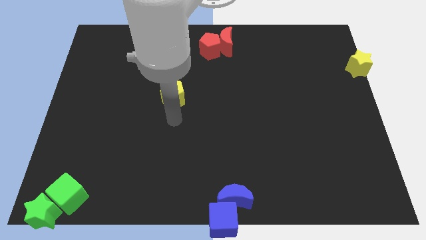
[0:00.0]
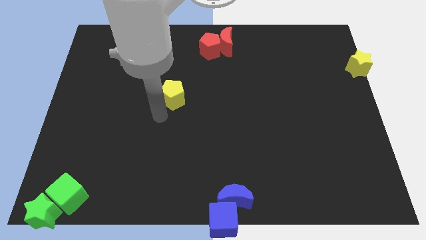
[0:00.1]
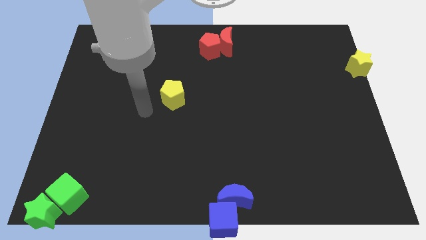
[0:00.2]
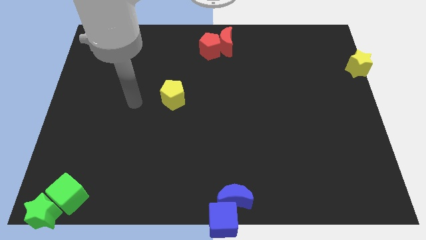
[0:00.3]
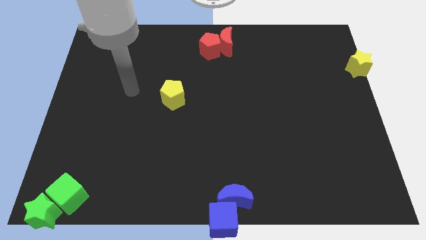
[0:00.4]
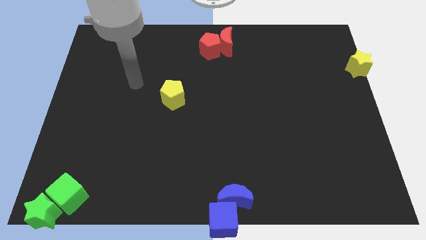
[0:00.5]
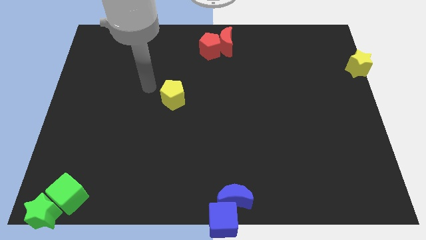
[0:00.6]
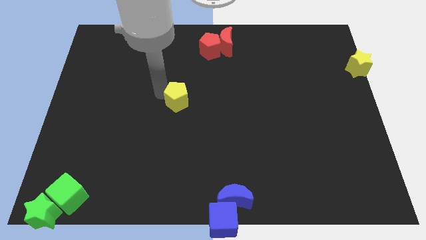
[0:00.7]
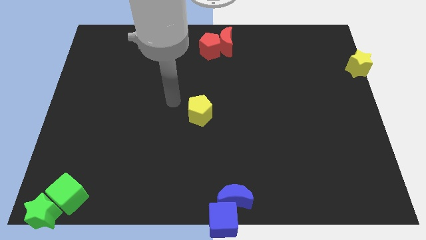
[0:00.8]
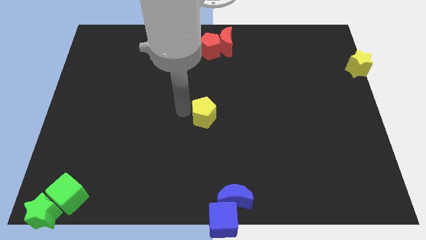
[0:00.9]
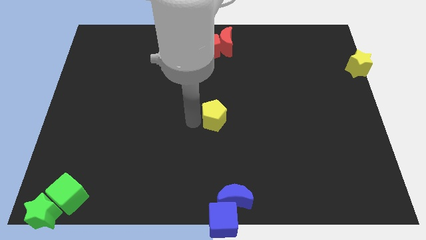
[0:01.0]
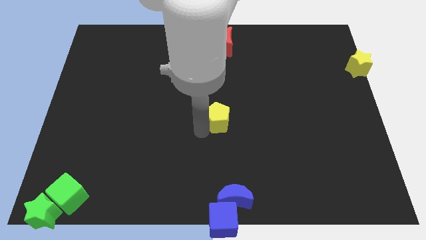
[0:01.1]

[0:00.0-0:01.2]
push yellow pentagon on the top of the blue crescent

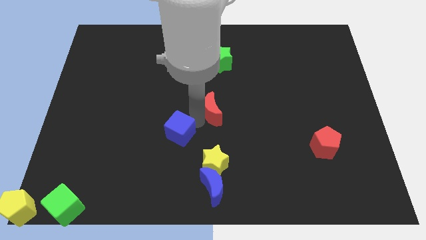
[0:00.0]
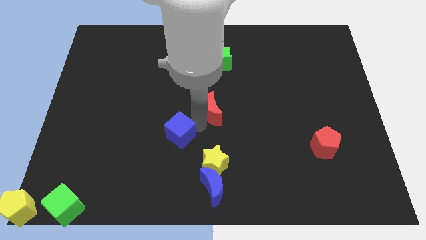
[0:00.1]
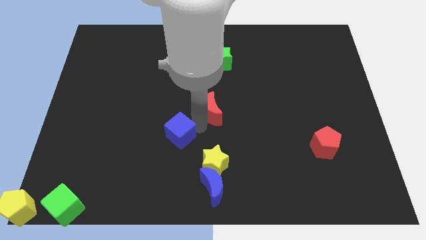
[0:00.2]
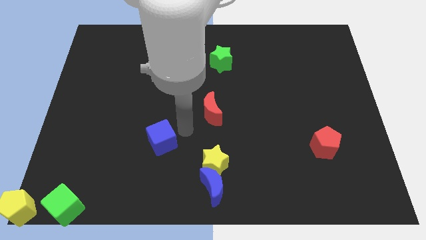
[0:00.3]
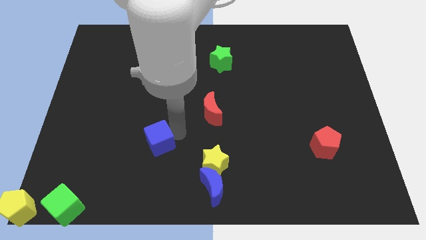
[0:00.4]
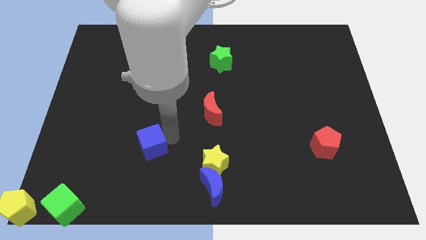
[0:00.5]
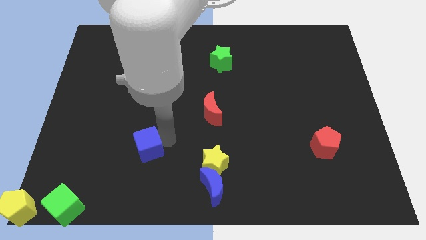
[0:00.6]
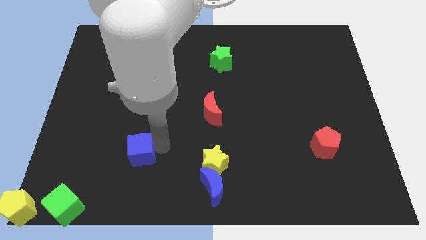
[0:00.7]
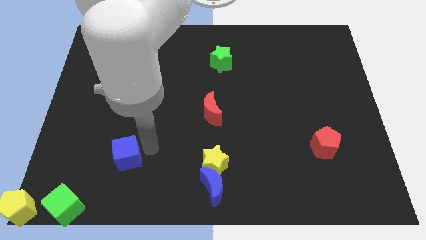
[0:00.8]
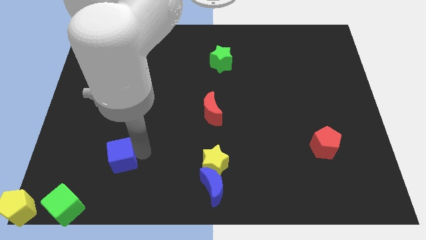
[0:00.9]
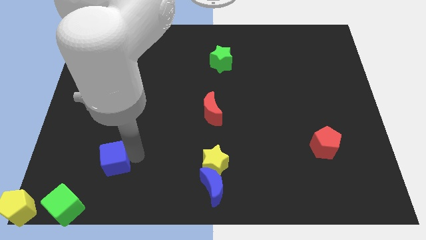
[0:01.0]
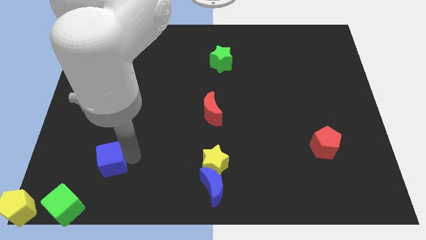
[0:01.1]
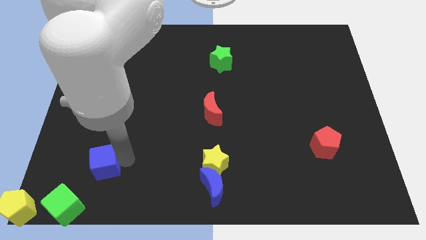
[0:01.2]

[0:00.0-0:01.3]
separate blue cube from red crescent

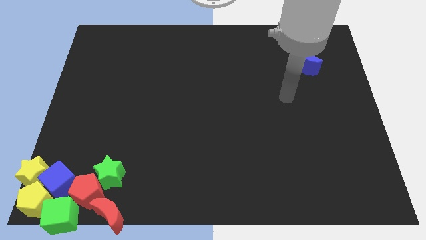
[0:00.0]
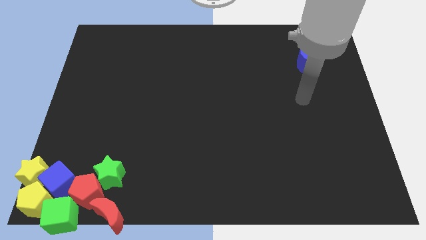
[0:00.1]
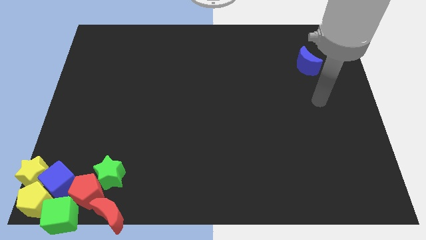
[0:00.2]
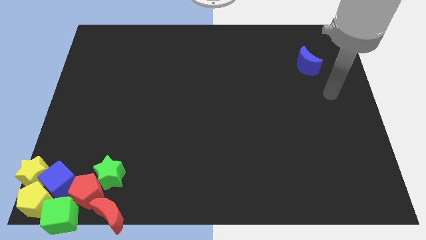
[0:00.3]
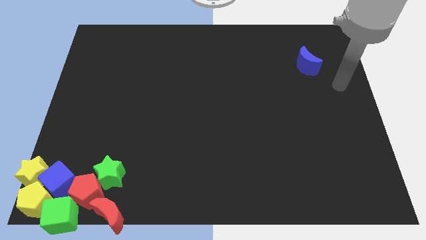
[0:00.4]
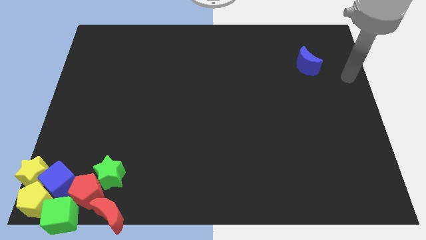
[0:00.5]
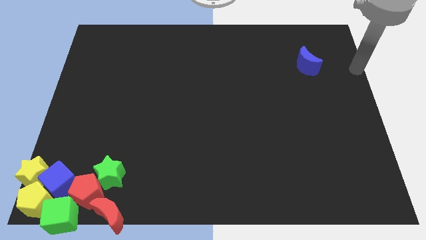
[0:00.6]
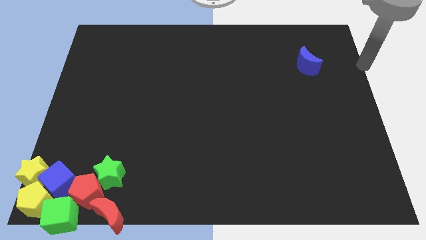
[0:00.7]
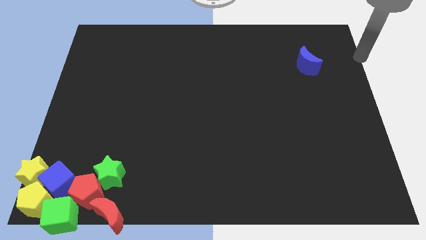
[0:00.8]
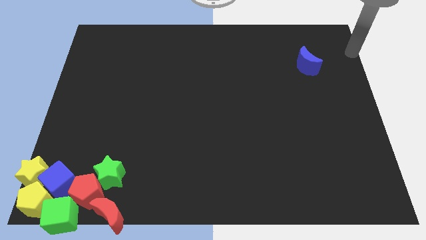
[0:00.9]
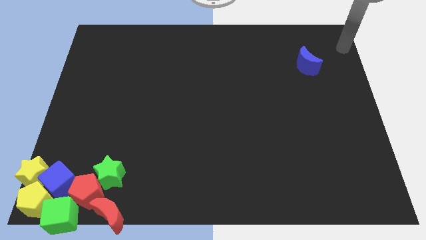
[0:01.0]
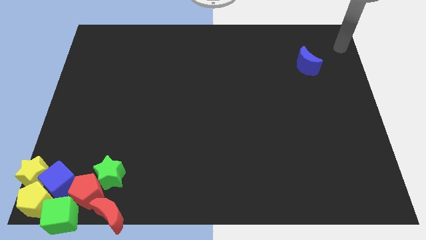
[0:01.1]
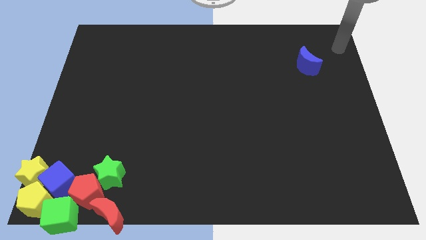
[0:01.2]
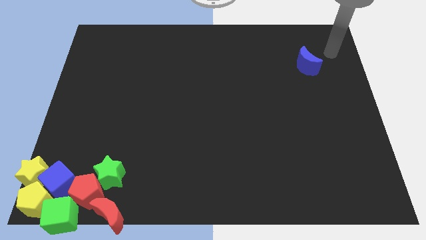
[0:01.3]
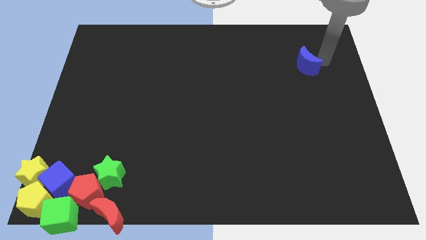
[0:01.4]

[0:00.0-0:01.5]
move your arm right to the blue crescent

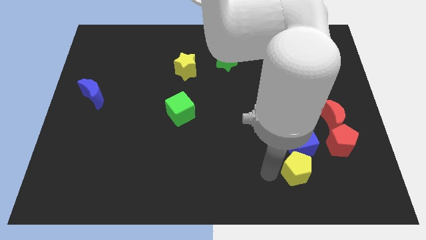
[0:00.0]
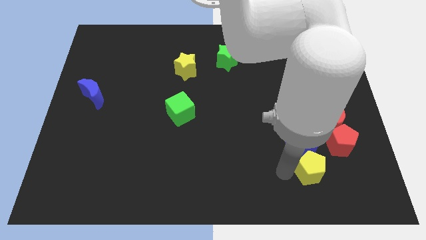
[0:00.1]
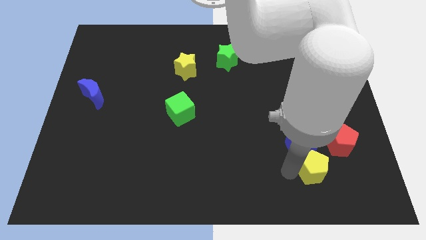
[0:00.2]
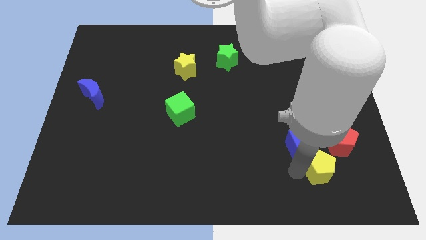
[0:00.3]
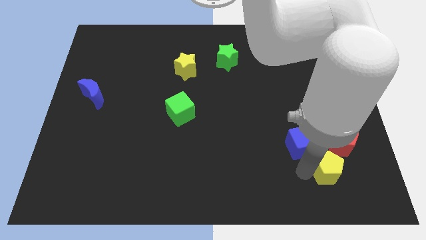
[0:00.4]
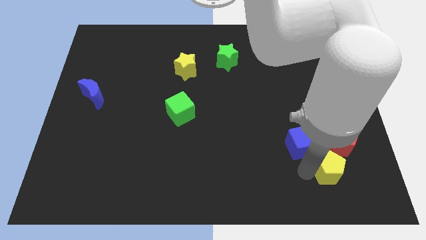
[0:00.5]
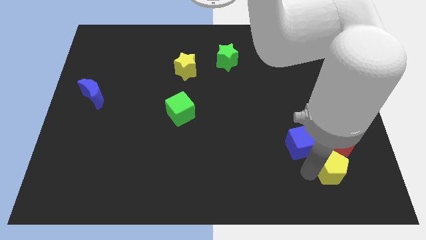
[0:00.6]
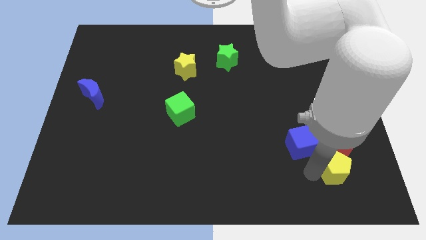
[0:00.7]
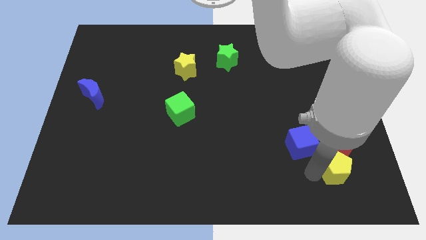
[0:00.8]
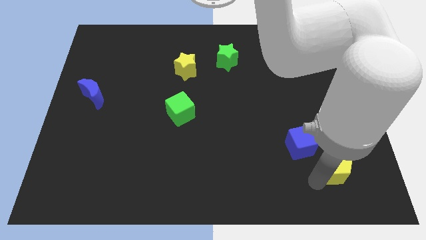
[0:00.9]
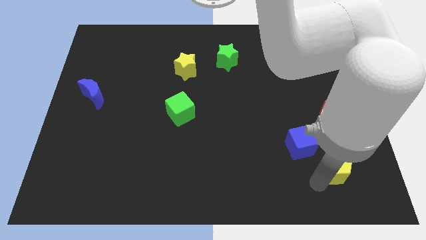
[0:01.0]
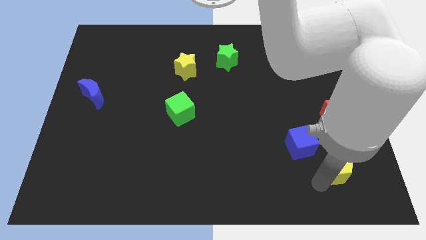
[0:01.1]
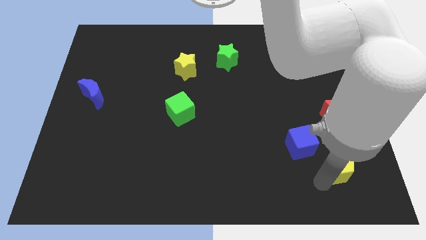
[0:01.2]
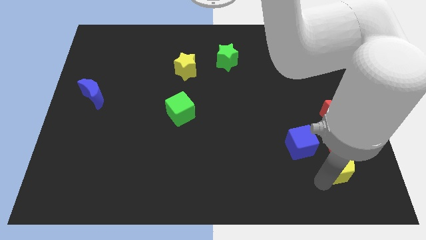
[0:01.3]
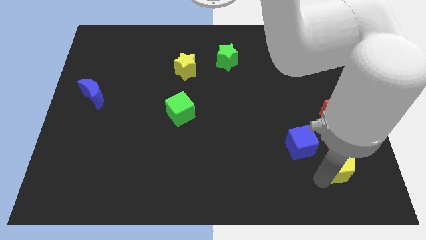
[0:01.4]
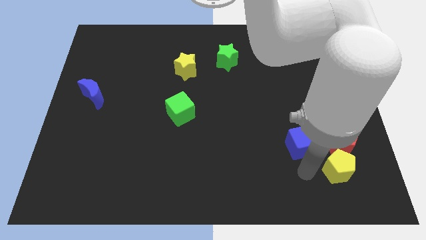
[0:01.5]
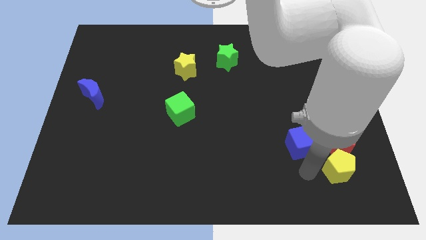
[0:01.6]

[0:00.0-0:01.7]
place the yellow pentagon at the bottom side of the red pentagon

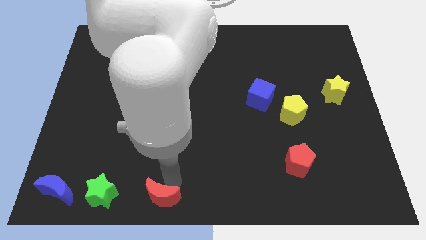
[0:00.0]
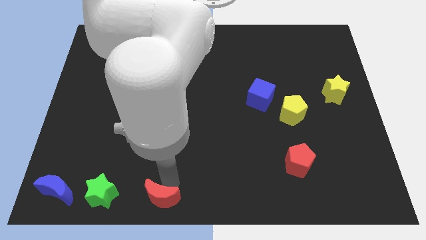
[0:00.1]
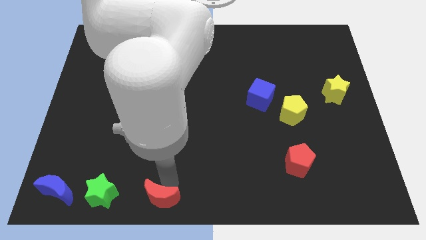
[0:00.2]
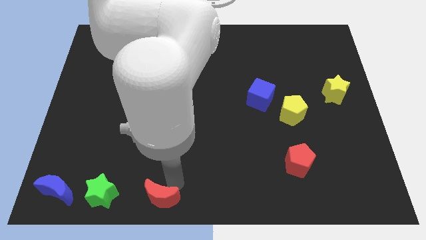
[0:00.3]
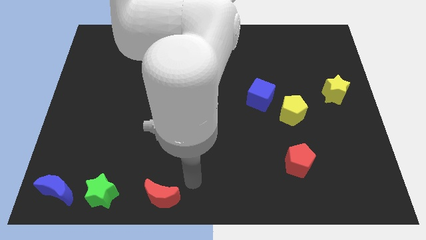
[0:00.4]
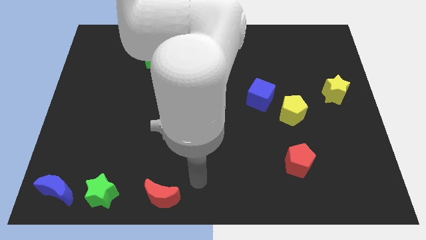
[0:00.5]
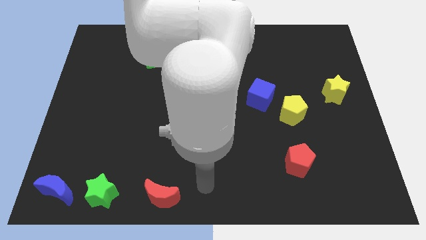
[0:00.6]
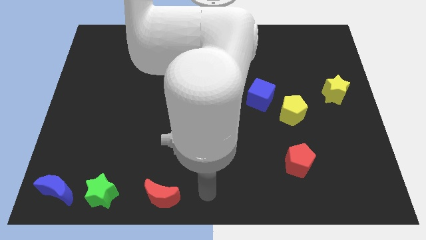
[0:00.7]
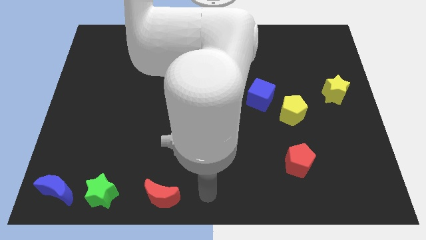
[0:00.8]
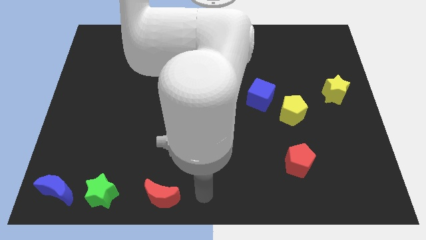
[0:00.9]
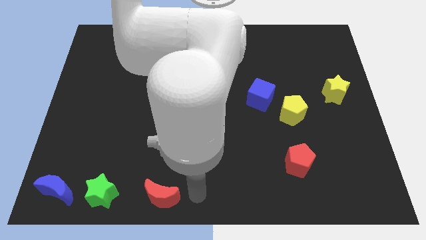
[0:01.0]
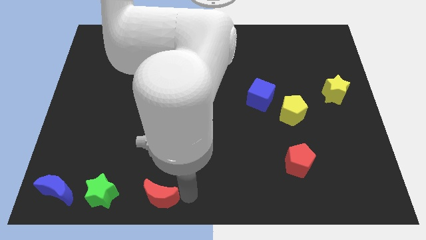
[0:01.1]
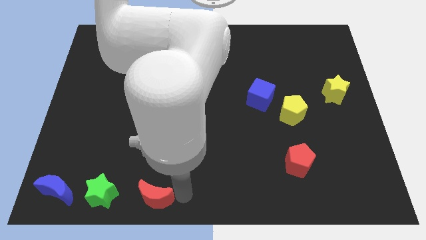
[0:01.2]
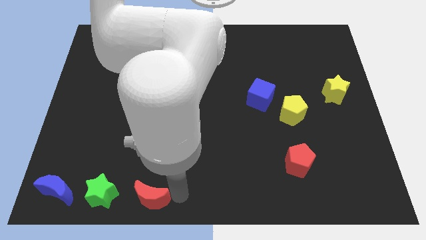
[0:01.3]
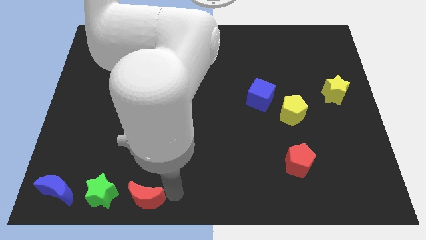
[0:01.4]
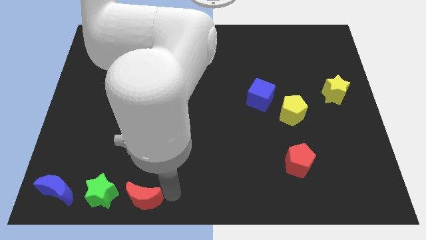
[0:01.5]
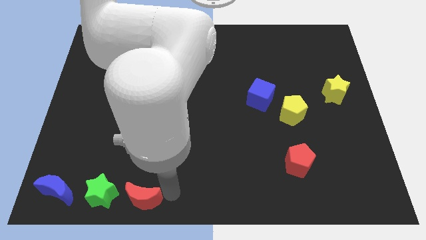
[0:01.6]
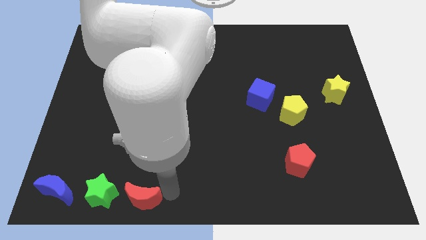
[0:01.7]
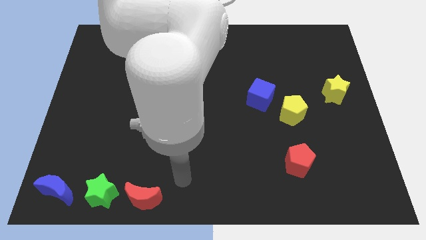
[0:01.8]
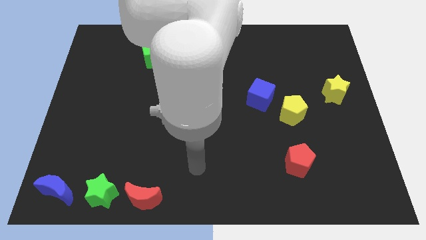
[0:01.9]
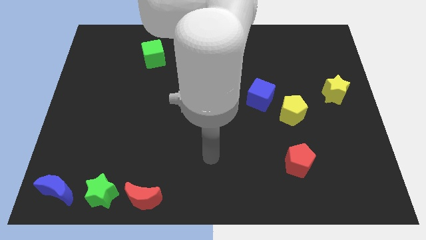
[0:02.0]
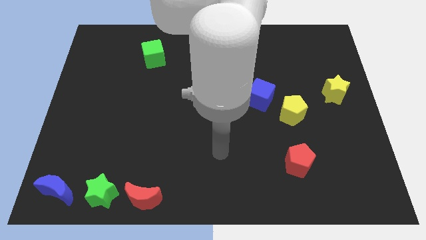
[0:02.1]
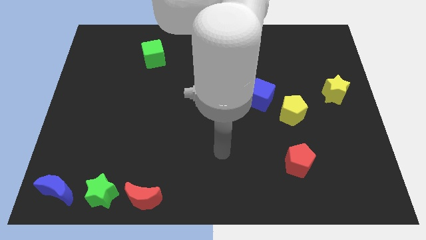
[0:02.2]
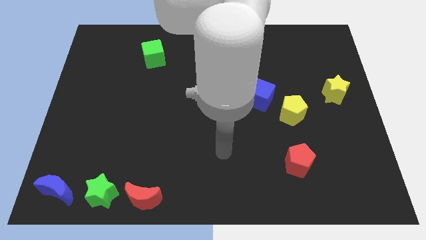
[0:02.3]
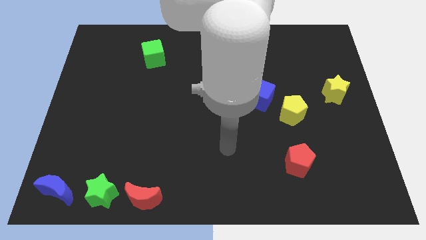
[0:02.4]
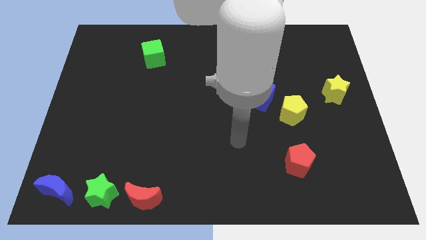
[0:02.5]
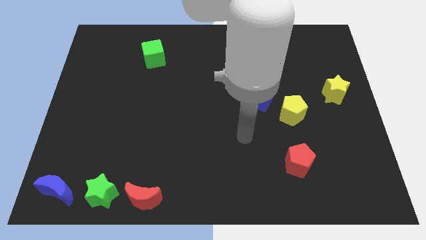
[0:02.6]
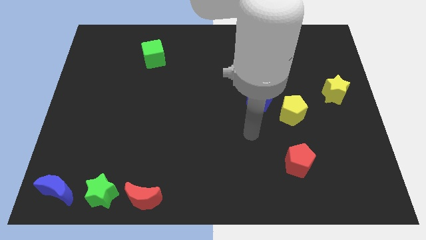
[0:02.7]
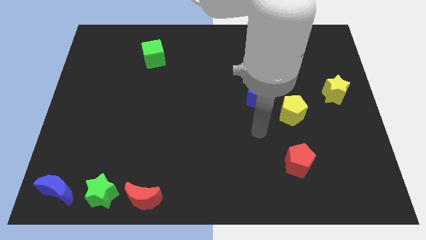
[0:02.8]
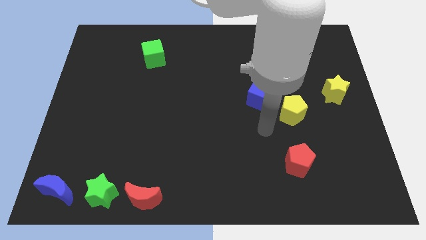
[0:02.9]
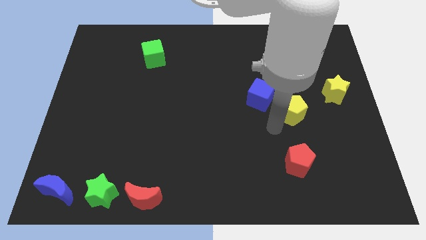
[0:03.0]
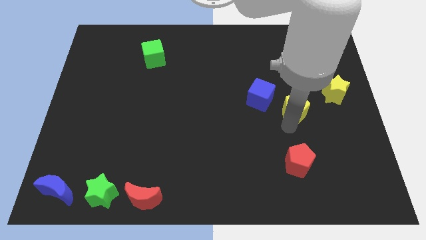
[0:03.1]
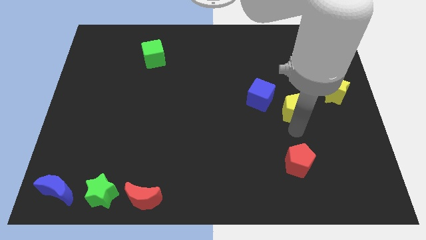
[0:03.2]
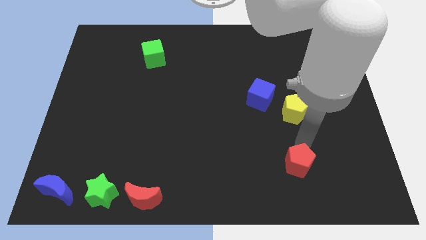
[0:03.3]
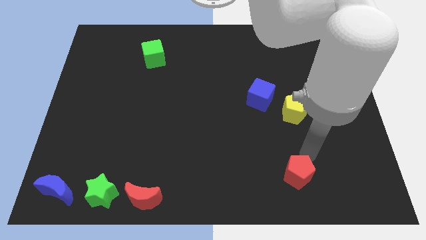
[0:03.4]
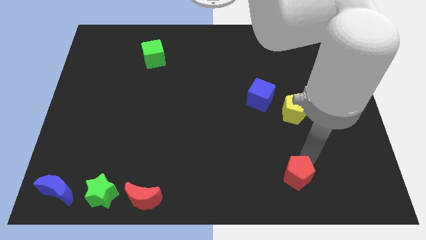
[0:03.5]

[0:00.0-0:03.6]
push the red crescent close to the green star
